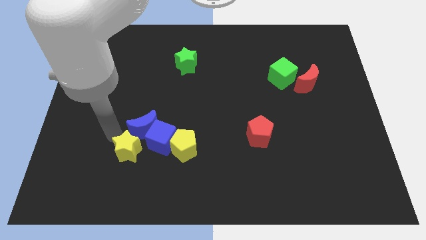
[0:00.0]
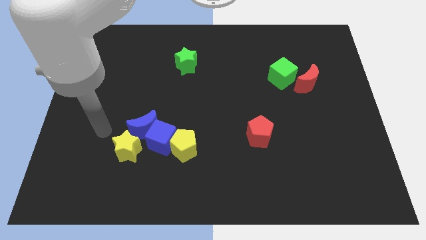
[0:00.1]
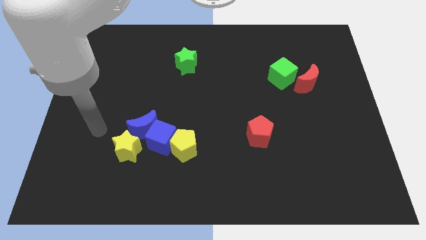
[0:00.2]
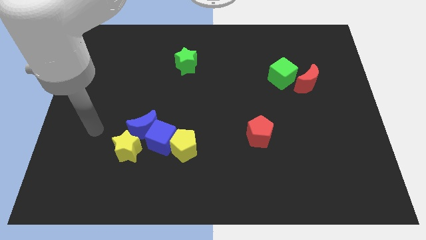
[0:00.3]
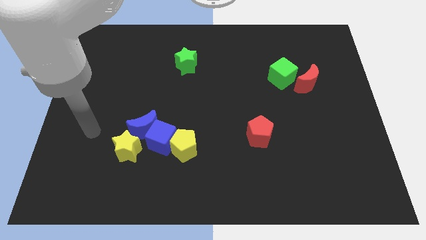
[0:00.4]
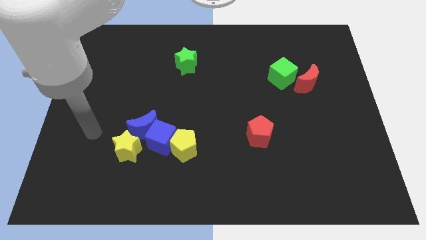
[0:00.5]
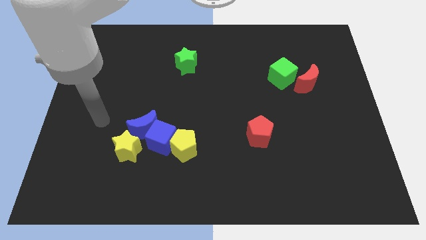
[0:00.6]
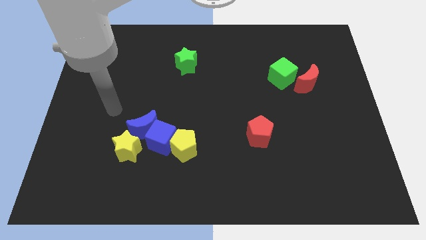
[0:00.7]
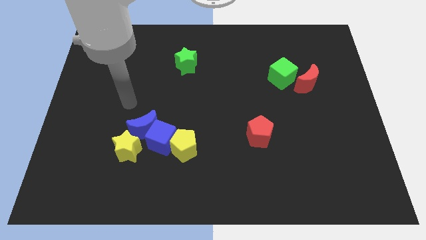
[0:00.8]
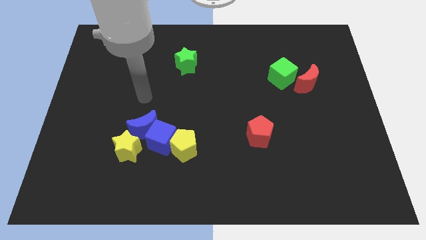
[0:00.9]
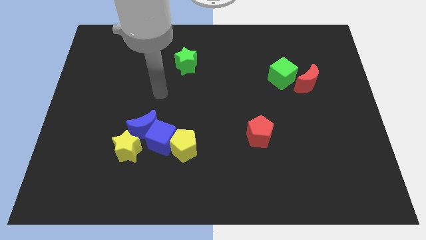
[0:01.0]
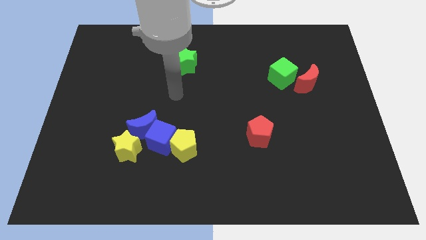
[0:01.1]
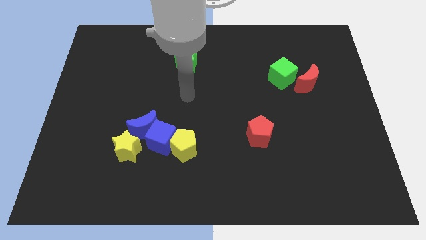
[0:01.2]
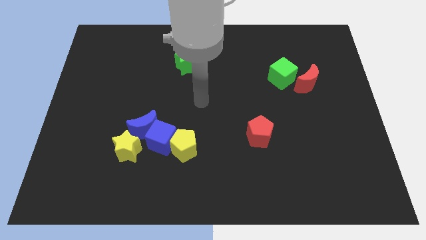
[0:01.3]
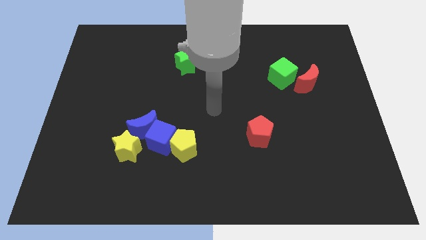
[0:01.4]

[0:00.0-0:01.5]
move your arm away from yellow star

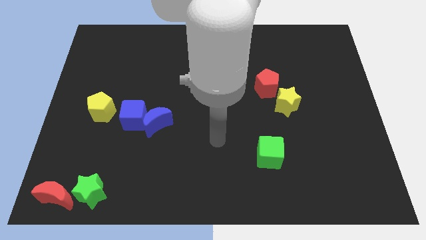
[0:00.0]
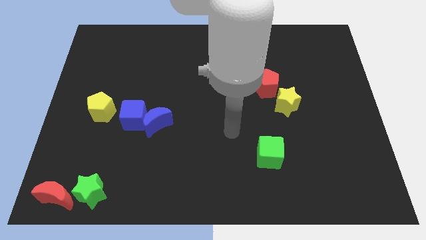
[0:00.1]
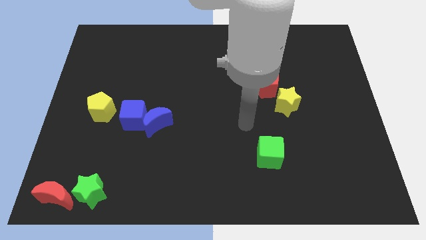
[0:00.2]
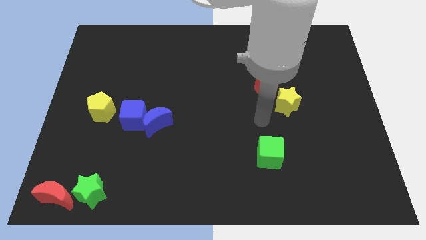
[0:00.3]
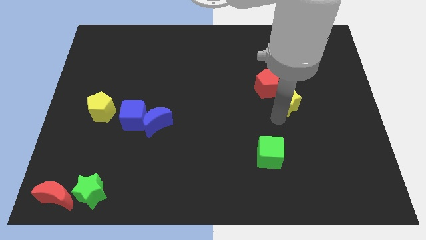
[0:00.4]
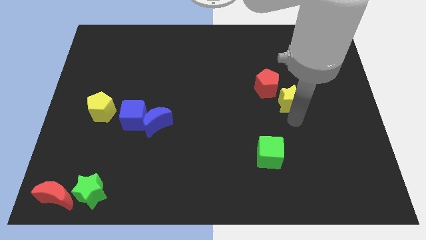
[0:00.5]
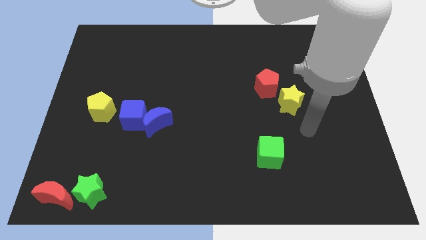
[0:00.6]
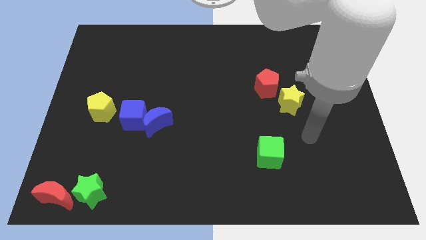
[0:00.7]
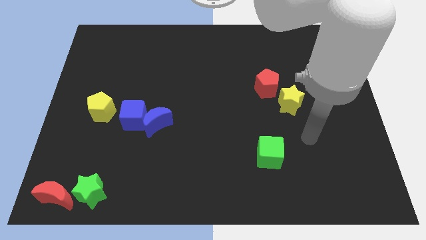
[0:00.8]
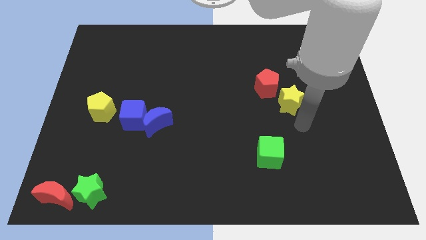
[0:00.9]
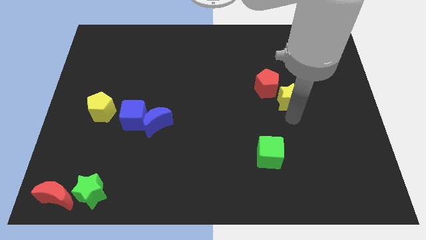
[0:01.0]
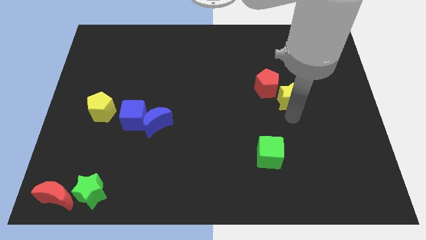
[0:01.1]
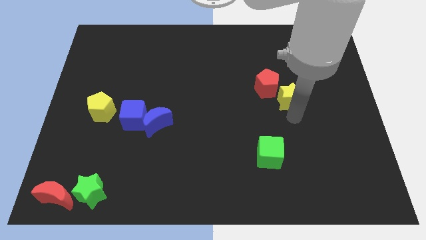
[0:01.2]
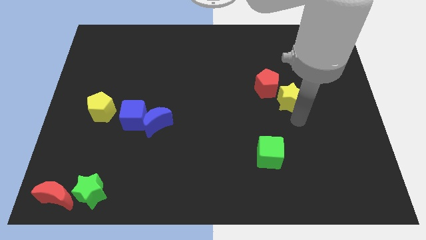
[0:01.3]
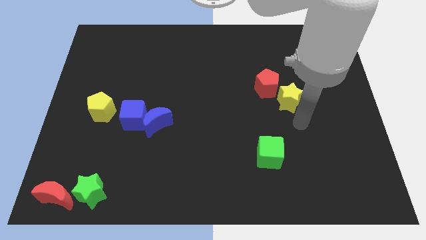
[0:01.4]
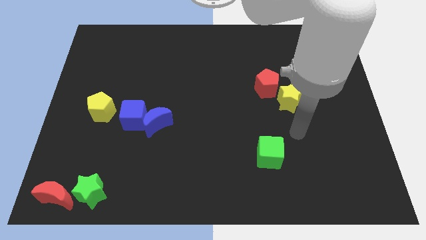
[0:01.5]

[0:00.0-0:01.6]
touch the bottom side of the yellow star

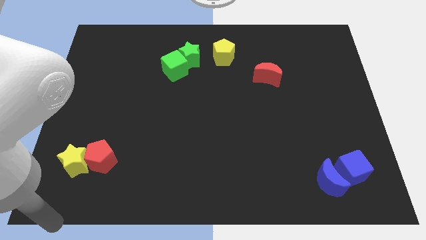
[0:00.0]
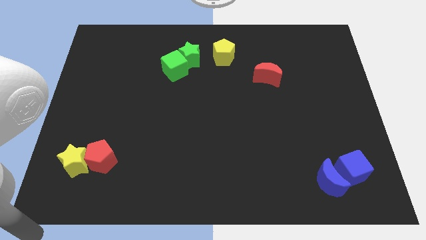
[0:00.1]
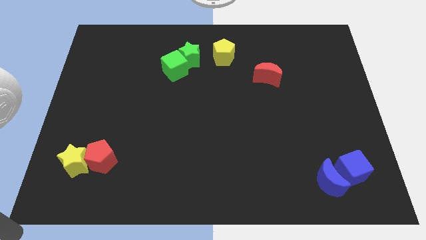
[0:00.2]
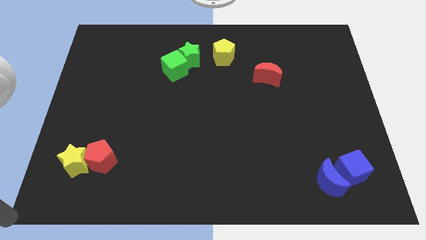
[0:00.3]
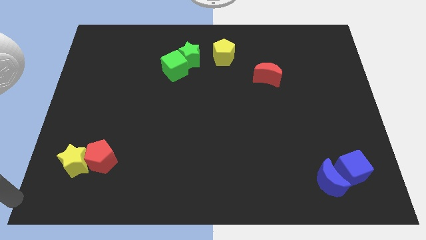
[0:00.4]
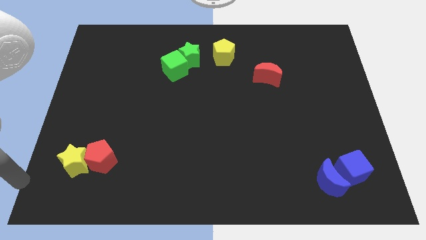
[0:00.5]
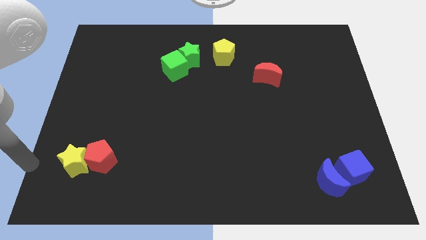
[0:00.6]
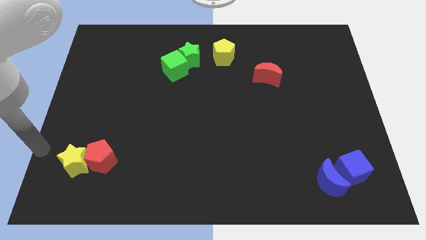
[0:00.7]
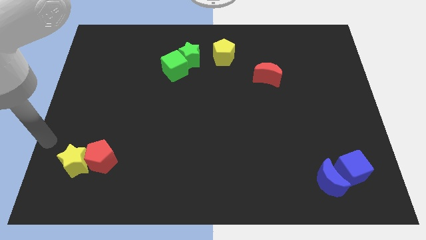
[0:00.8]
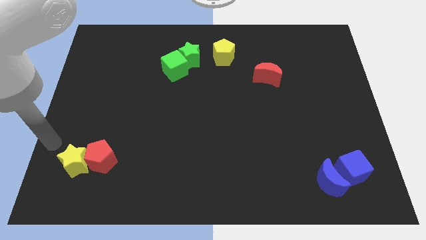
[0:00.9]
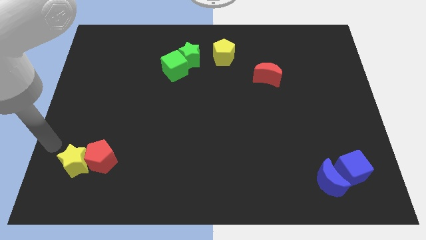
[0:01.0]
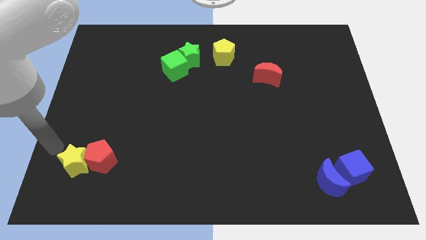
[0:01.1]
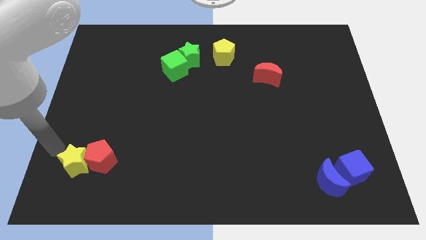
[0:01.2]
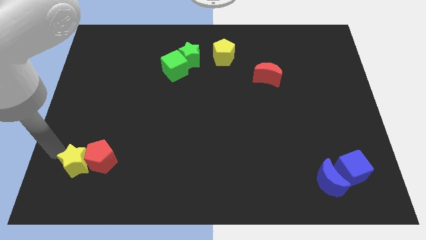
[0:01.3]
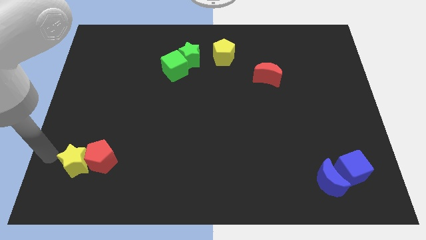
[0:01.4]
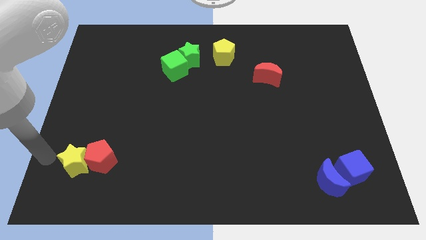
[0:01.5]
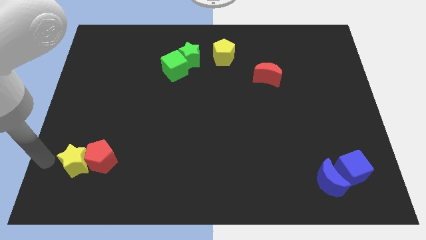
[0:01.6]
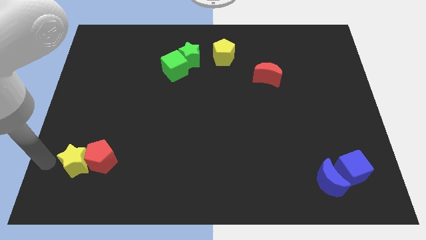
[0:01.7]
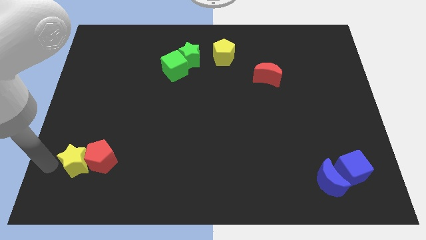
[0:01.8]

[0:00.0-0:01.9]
point your arm to the left of yellow star

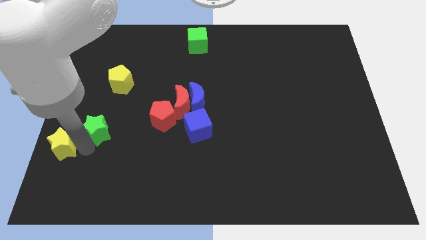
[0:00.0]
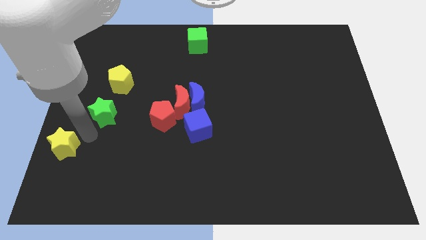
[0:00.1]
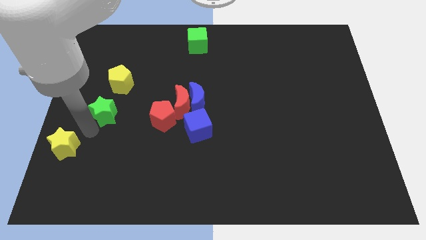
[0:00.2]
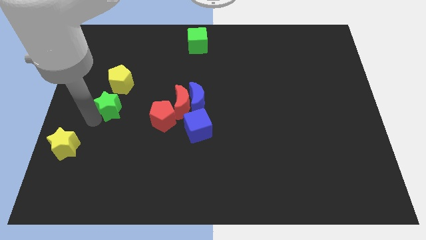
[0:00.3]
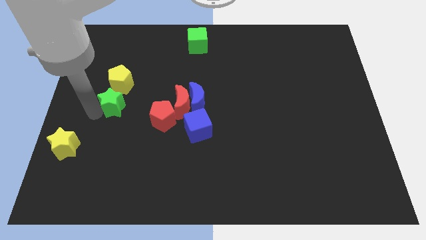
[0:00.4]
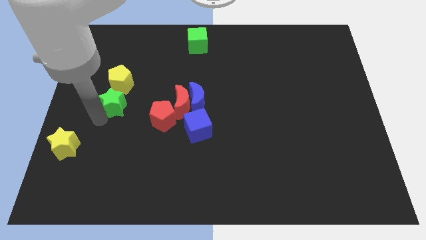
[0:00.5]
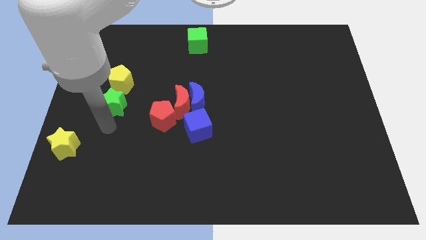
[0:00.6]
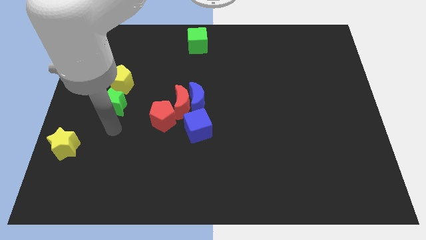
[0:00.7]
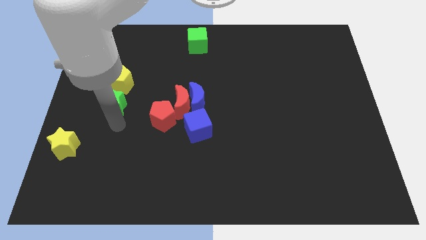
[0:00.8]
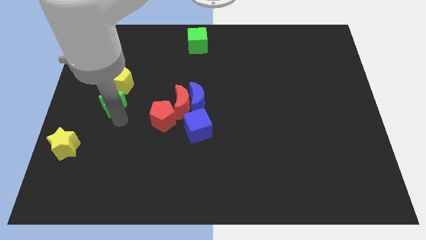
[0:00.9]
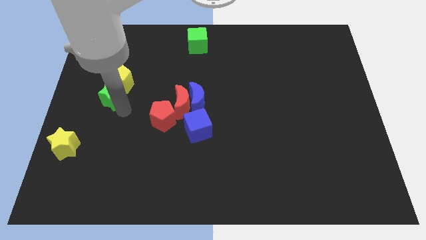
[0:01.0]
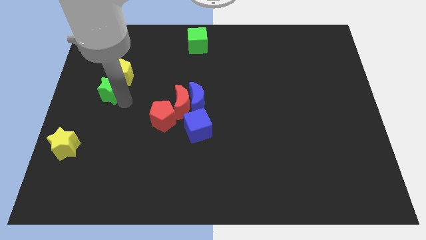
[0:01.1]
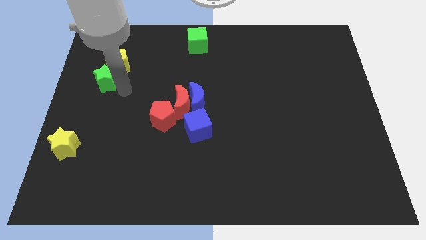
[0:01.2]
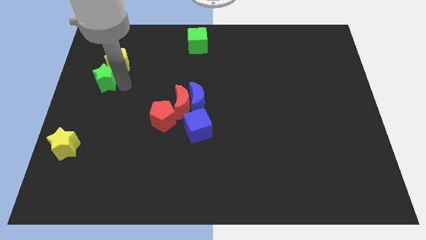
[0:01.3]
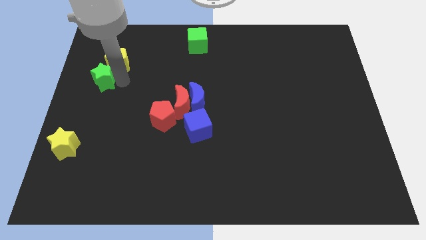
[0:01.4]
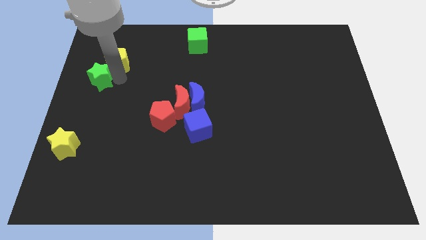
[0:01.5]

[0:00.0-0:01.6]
push the green star into yellow pentagon

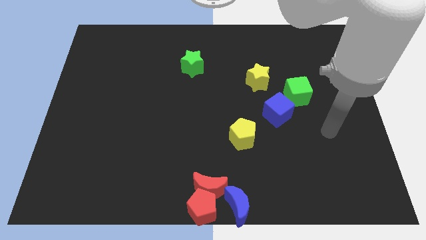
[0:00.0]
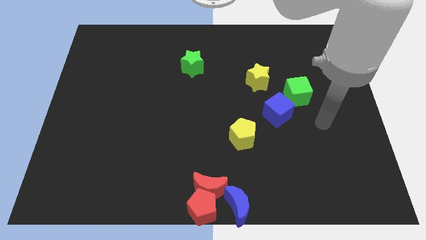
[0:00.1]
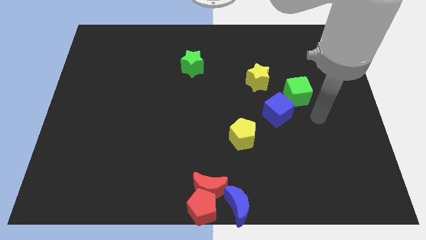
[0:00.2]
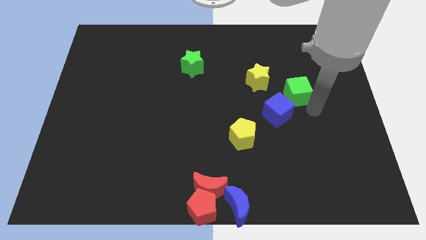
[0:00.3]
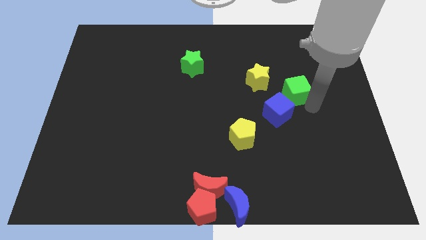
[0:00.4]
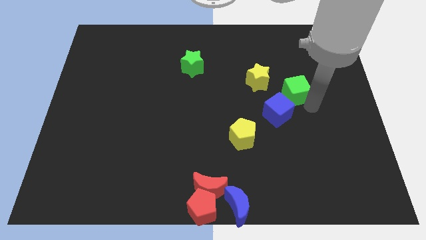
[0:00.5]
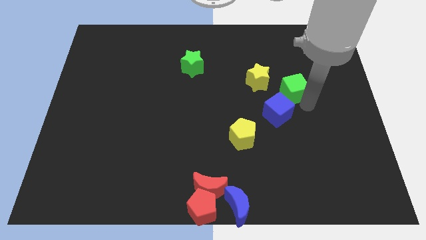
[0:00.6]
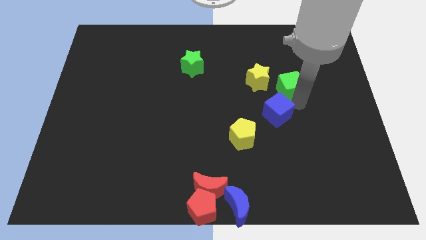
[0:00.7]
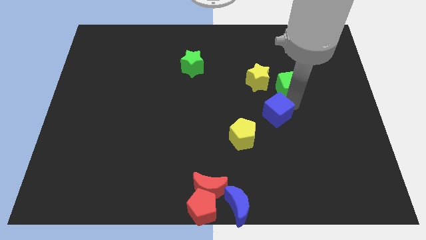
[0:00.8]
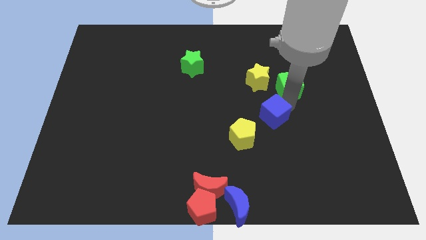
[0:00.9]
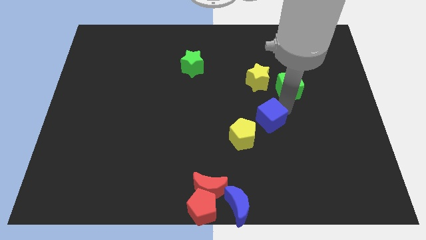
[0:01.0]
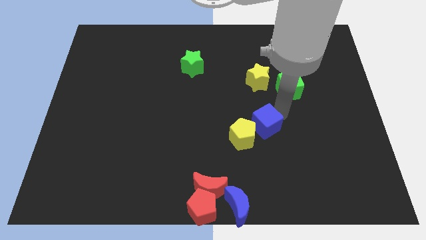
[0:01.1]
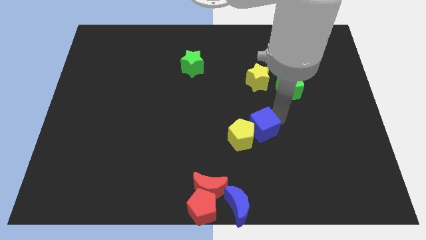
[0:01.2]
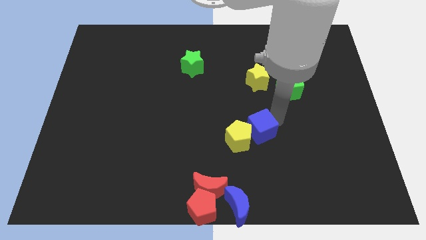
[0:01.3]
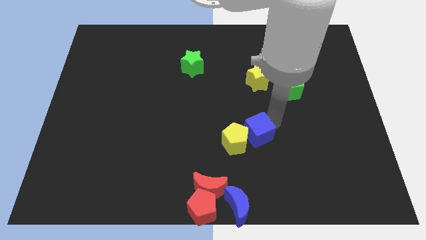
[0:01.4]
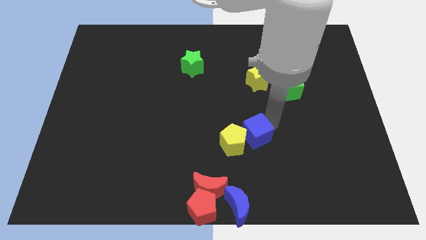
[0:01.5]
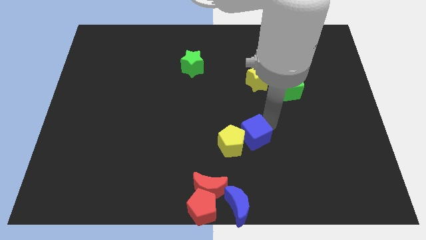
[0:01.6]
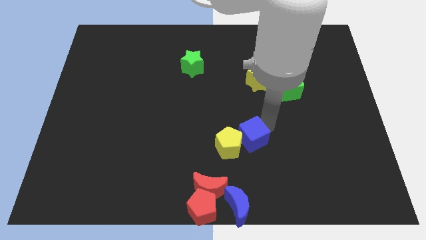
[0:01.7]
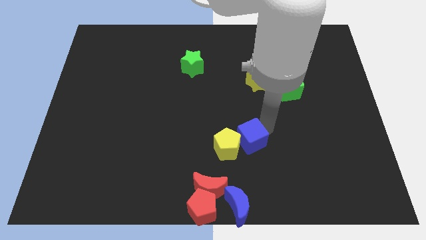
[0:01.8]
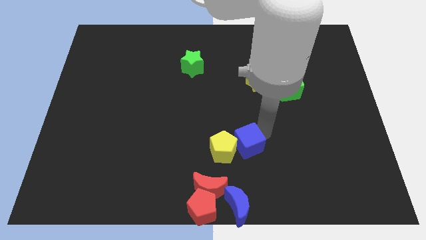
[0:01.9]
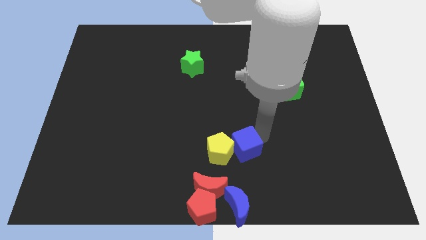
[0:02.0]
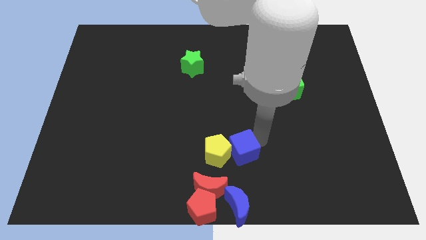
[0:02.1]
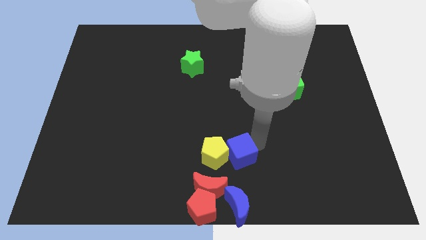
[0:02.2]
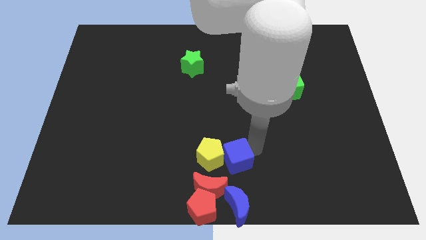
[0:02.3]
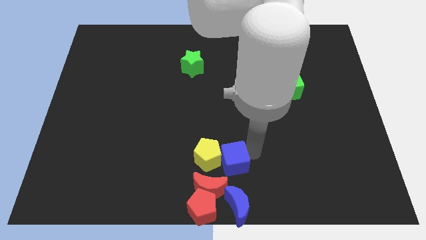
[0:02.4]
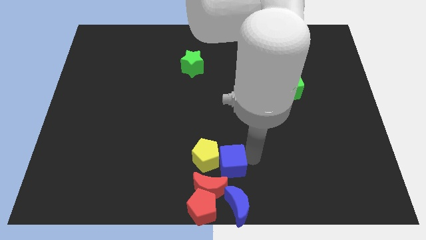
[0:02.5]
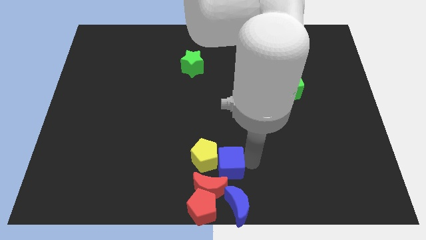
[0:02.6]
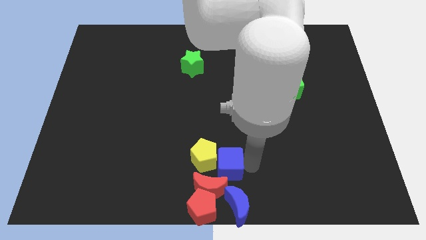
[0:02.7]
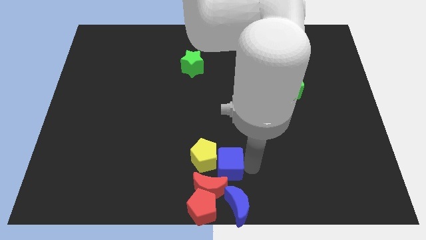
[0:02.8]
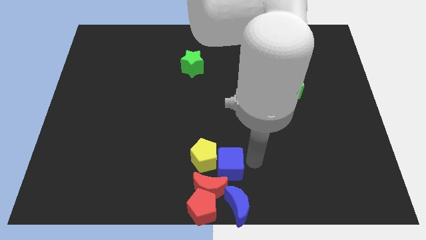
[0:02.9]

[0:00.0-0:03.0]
move the blue cube and yellow pentagon above the group of red blocks
